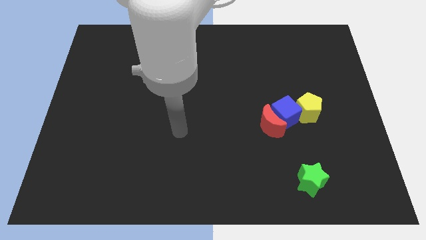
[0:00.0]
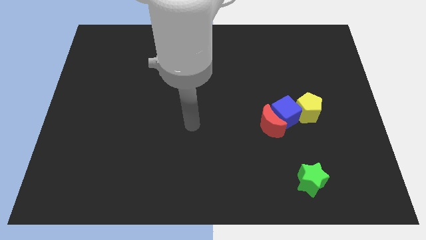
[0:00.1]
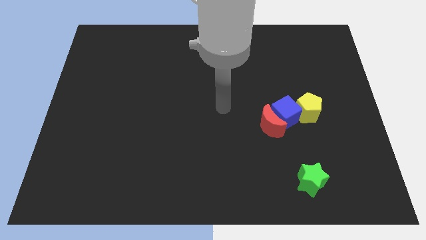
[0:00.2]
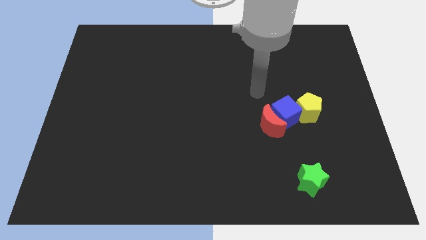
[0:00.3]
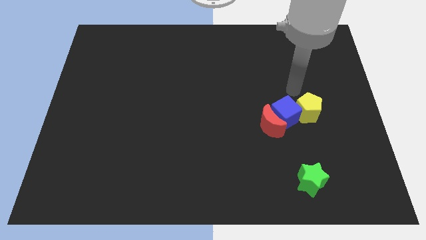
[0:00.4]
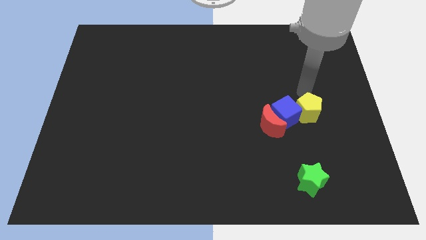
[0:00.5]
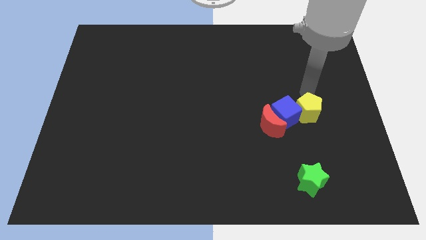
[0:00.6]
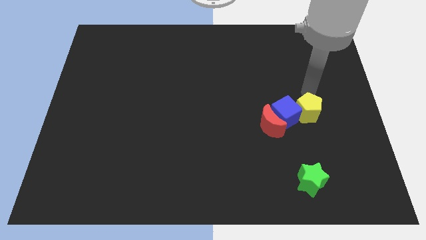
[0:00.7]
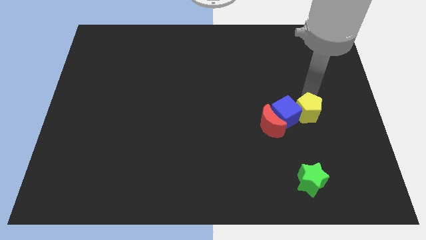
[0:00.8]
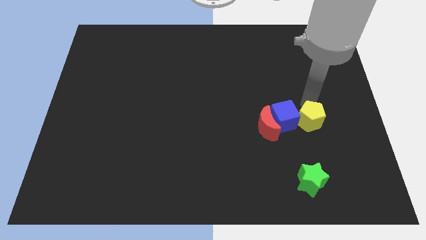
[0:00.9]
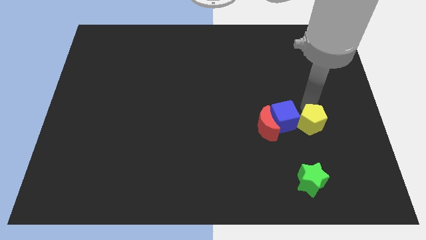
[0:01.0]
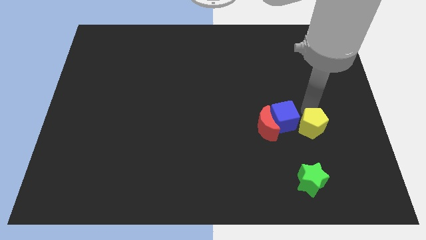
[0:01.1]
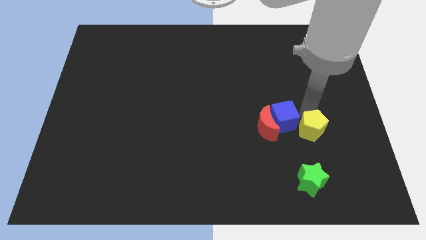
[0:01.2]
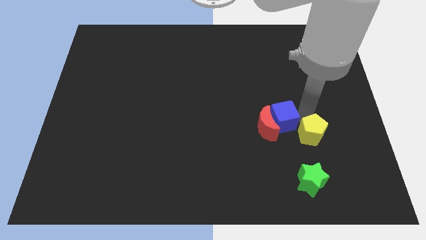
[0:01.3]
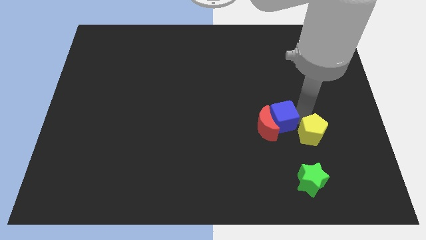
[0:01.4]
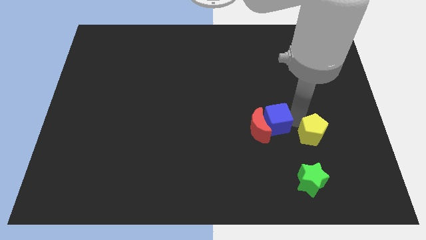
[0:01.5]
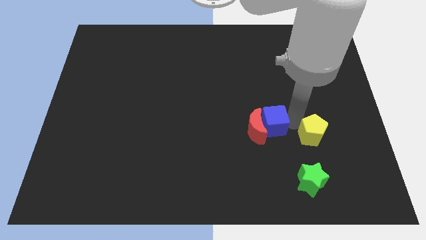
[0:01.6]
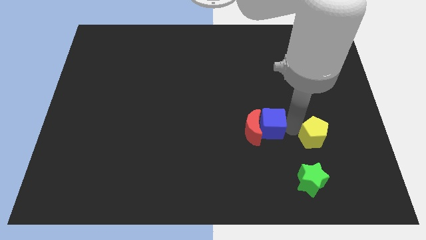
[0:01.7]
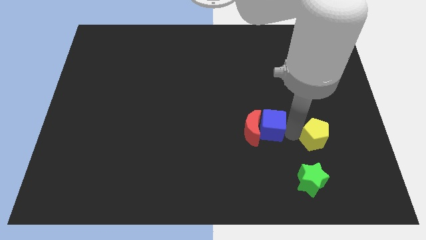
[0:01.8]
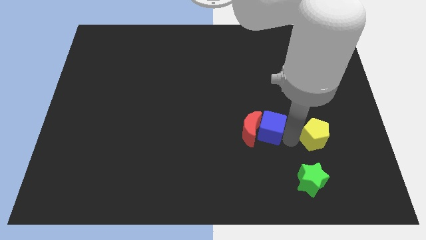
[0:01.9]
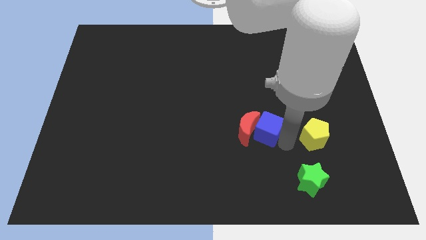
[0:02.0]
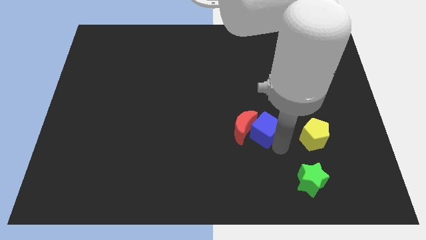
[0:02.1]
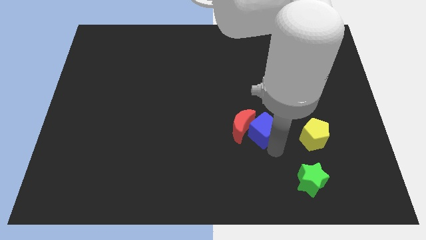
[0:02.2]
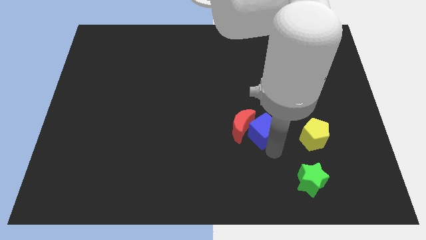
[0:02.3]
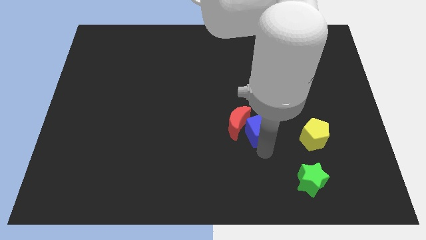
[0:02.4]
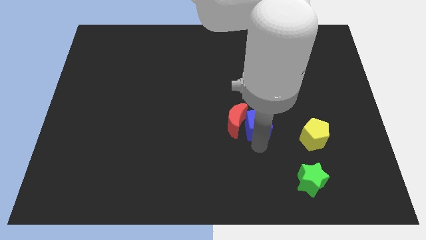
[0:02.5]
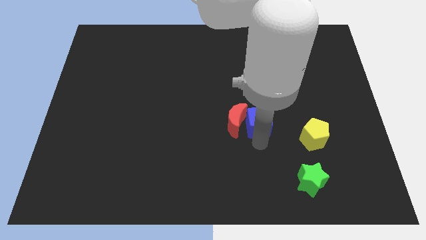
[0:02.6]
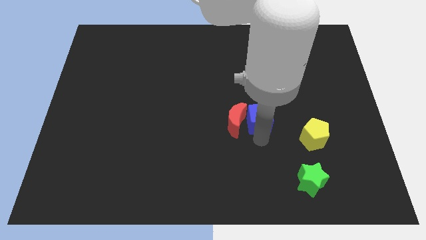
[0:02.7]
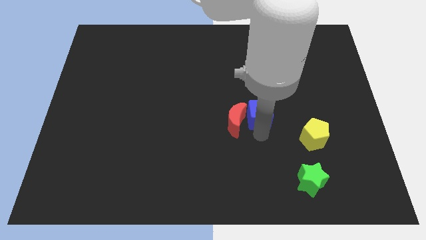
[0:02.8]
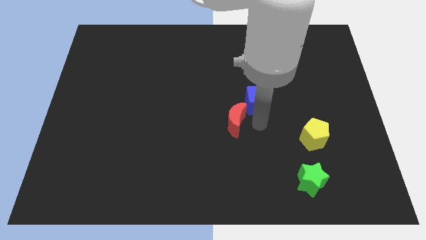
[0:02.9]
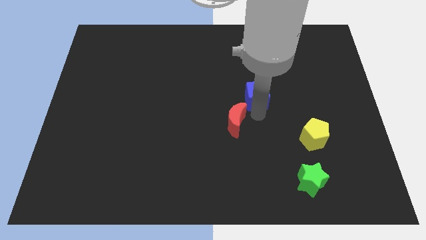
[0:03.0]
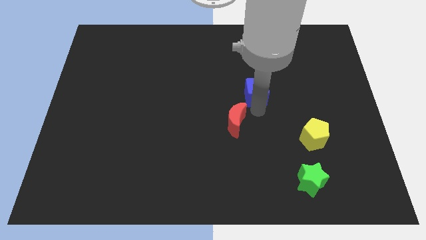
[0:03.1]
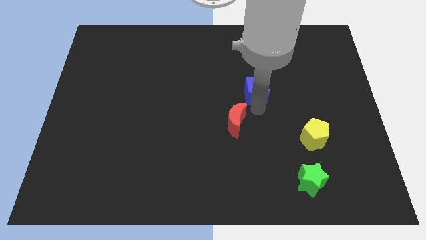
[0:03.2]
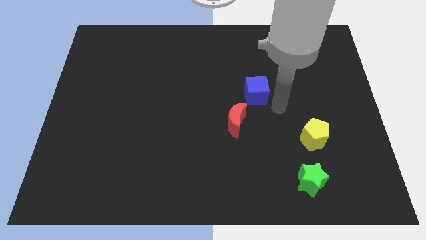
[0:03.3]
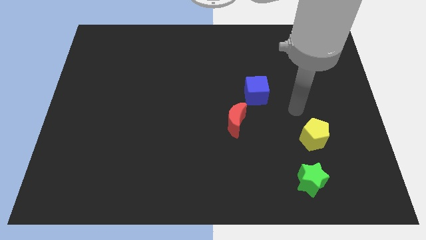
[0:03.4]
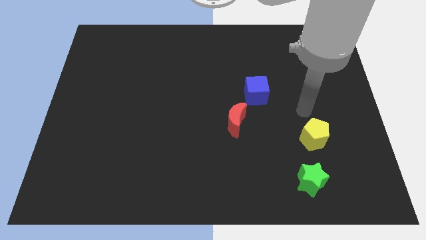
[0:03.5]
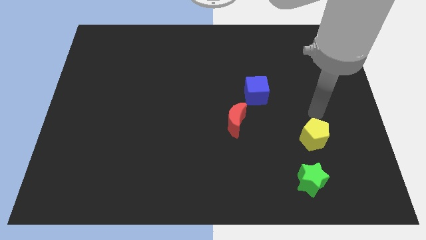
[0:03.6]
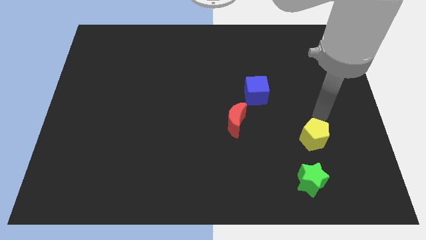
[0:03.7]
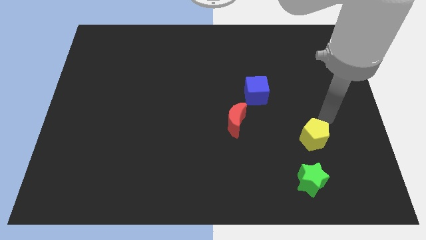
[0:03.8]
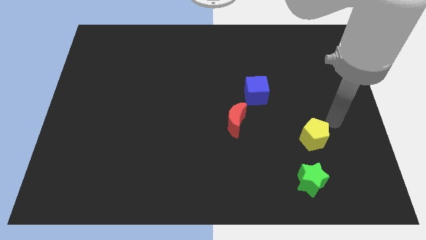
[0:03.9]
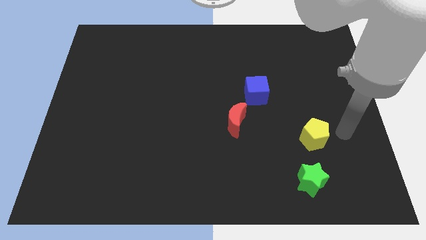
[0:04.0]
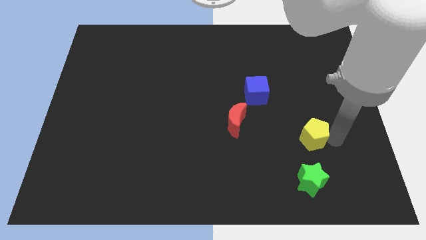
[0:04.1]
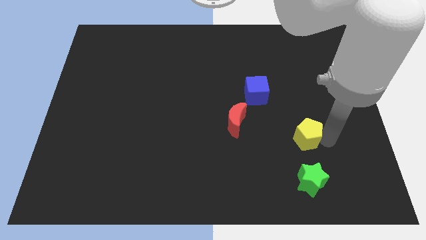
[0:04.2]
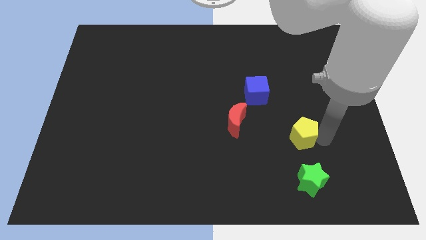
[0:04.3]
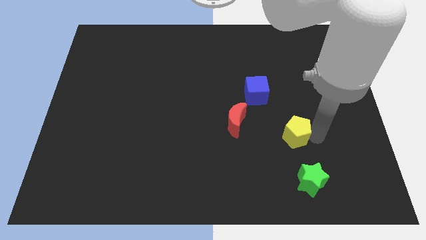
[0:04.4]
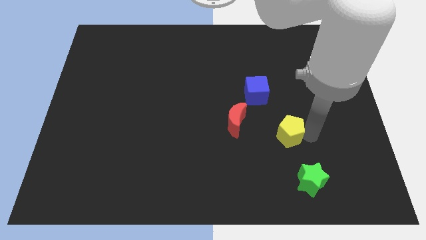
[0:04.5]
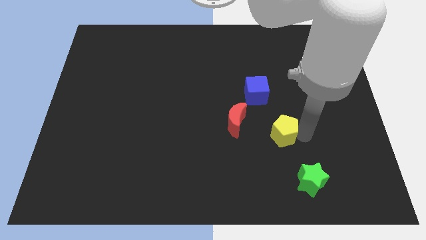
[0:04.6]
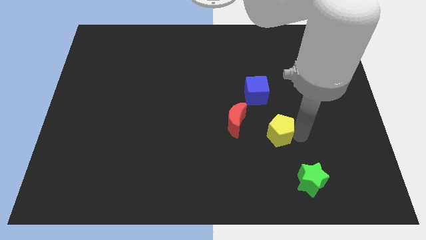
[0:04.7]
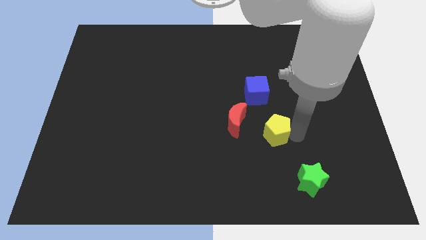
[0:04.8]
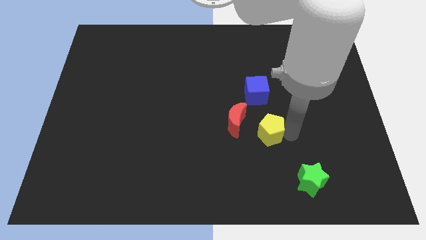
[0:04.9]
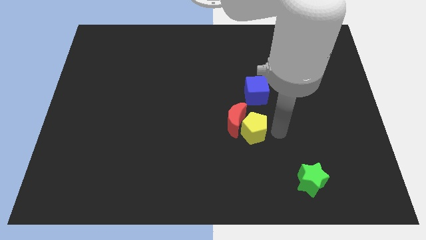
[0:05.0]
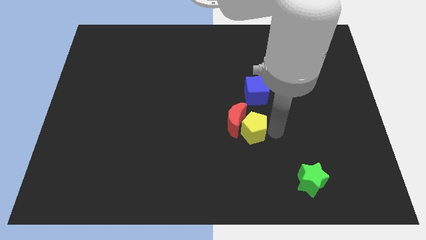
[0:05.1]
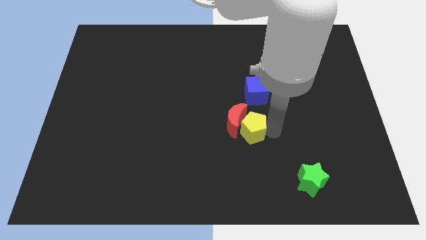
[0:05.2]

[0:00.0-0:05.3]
push the yellow pentagon towards the red moon

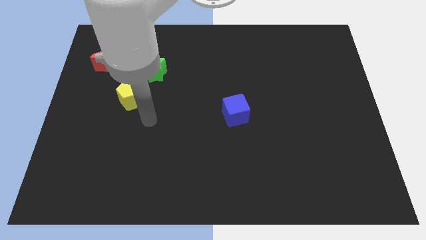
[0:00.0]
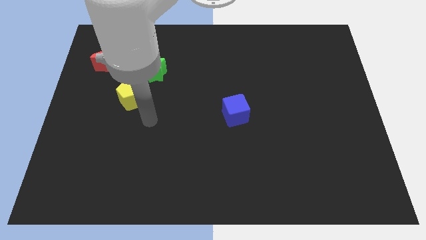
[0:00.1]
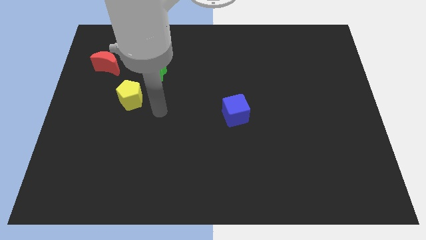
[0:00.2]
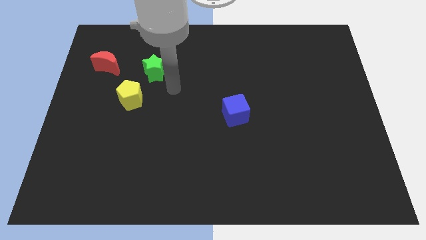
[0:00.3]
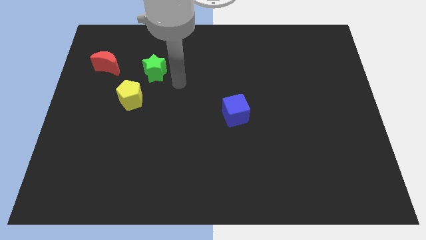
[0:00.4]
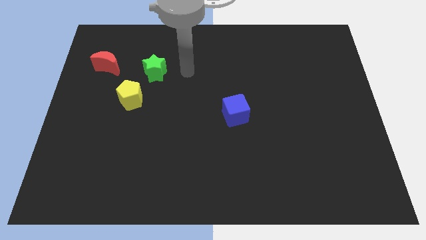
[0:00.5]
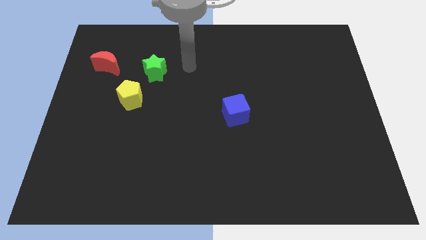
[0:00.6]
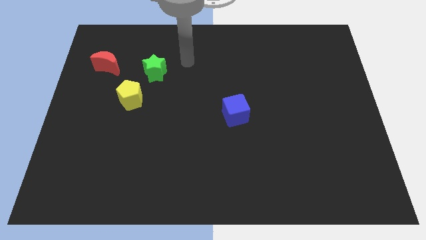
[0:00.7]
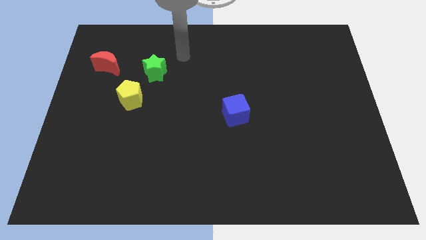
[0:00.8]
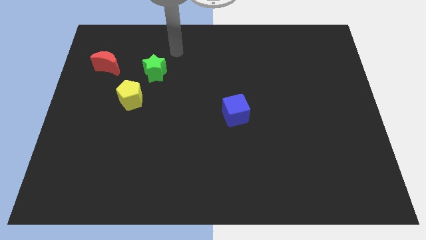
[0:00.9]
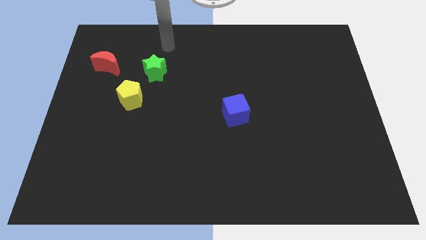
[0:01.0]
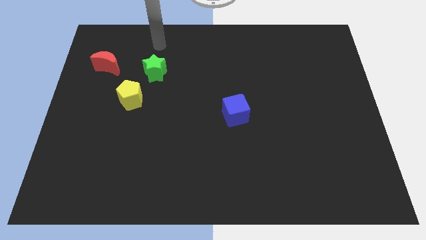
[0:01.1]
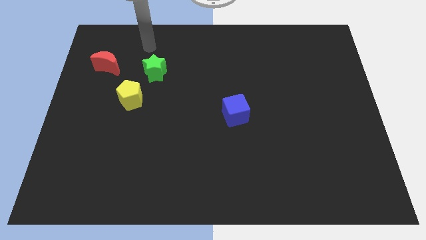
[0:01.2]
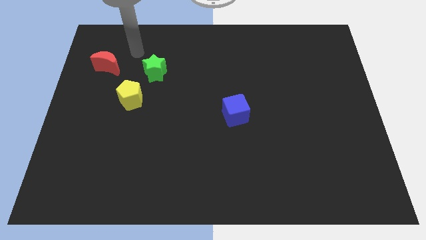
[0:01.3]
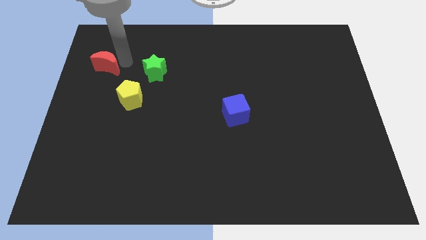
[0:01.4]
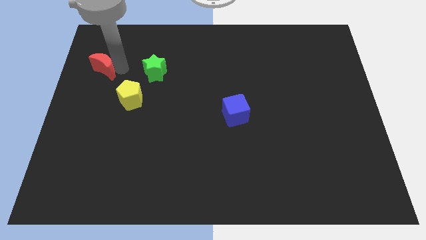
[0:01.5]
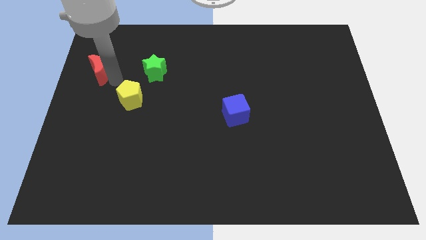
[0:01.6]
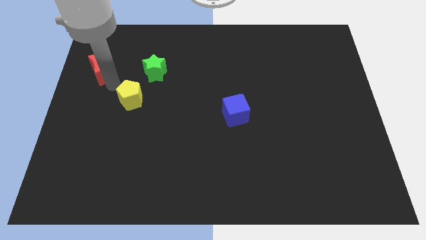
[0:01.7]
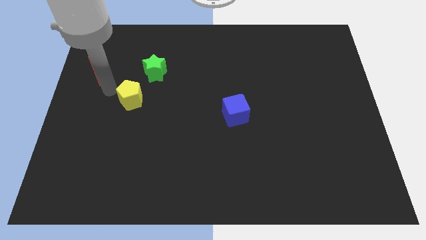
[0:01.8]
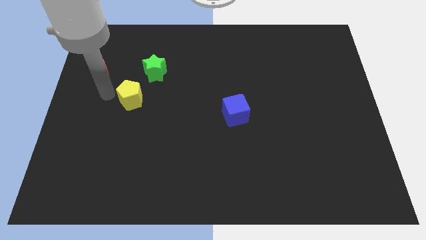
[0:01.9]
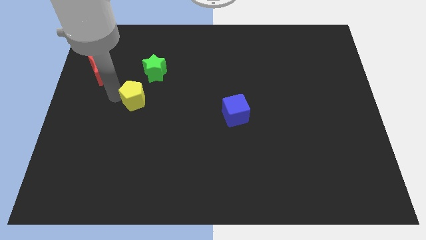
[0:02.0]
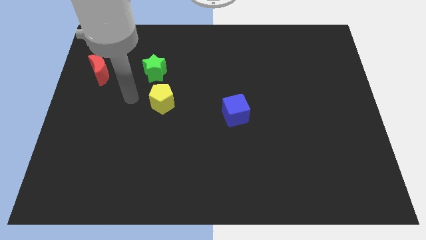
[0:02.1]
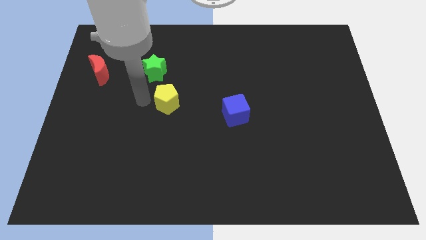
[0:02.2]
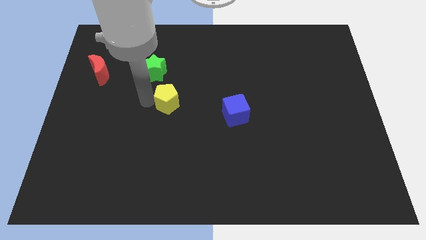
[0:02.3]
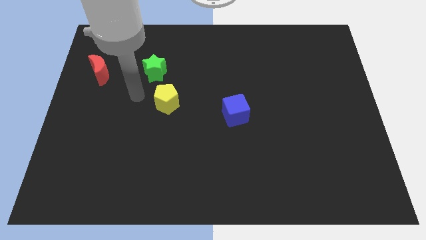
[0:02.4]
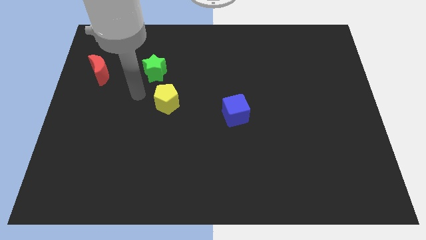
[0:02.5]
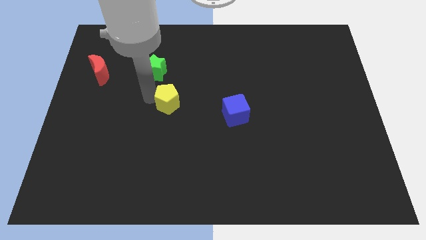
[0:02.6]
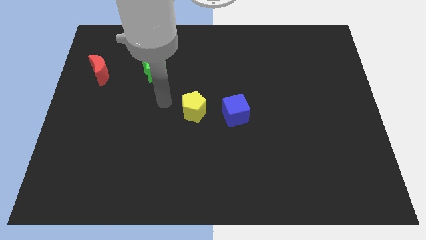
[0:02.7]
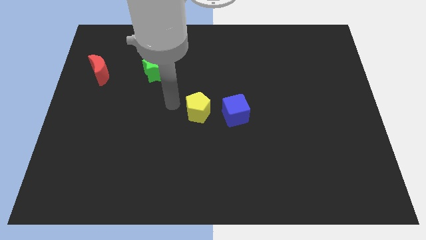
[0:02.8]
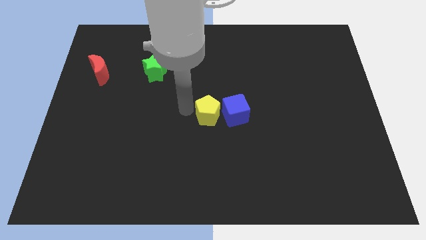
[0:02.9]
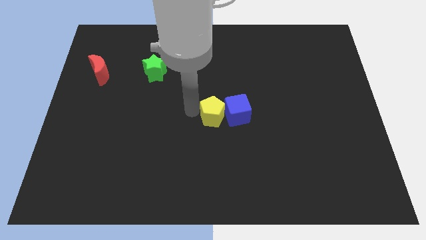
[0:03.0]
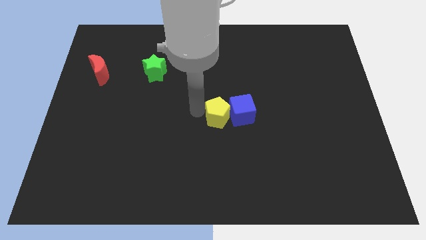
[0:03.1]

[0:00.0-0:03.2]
put the yellow pentagon to the cube
